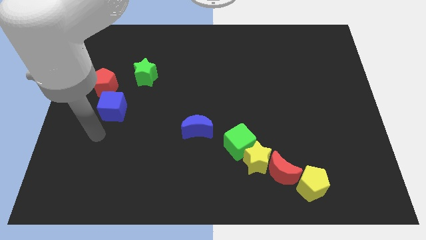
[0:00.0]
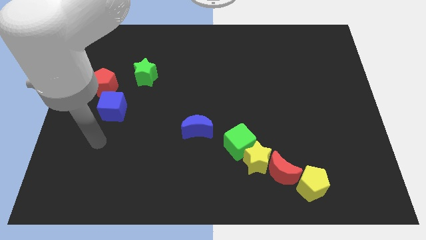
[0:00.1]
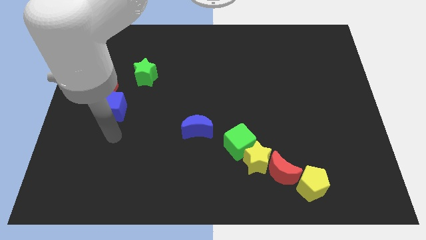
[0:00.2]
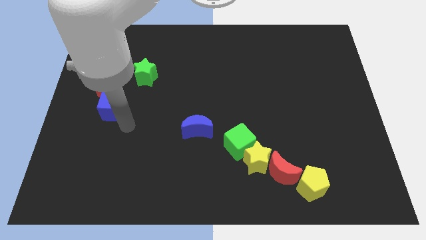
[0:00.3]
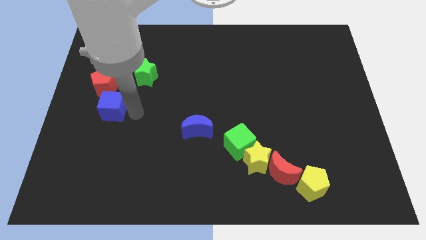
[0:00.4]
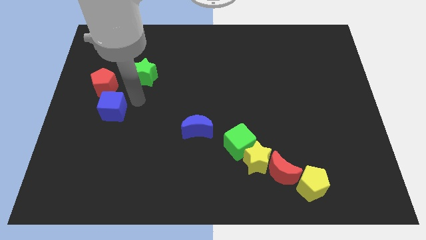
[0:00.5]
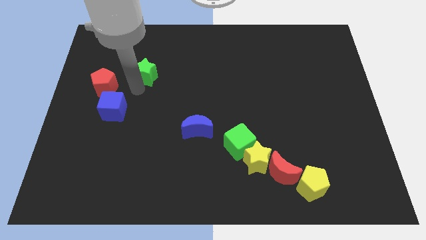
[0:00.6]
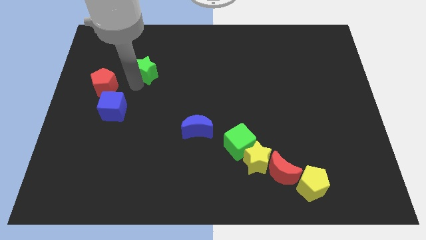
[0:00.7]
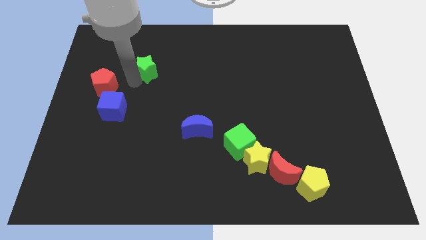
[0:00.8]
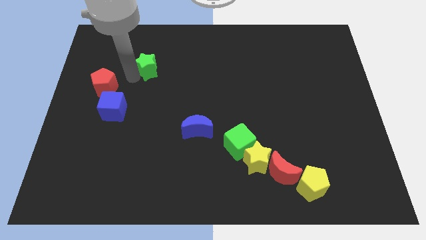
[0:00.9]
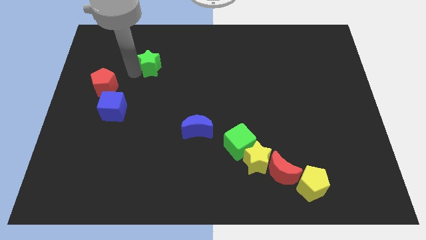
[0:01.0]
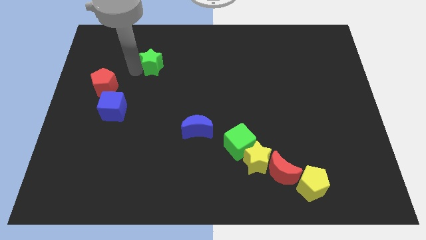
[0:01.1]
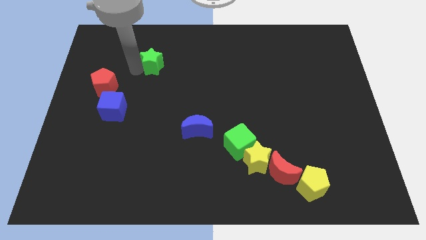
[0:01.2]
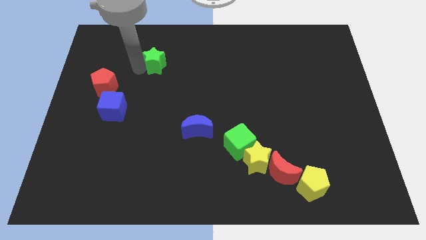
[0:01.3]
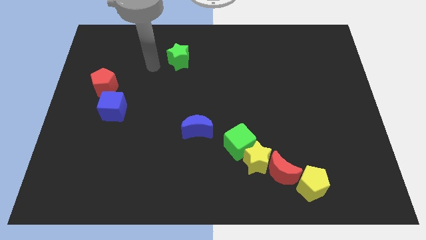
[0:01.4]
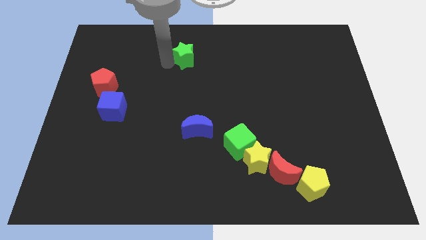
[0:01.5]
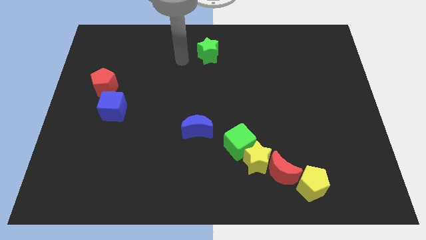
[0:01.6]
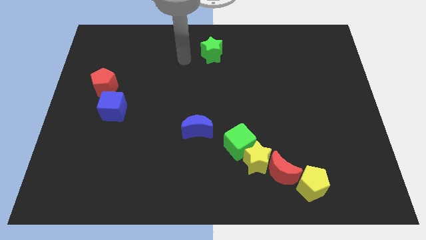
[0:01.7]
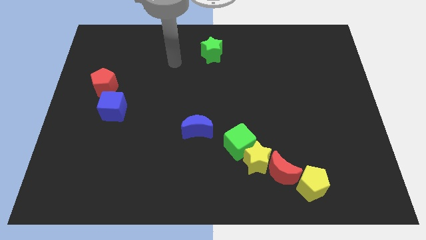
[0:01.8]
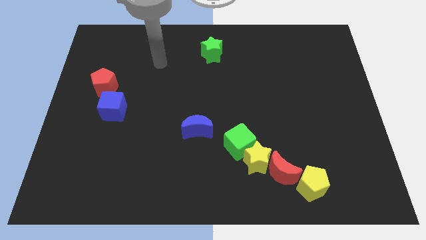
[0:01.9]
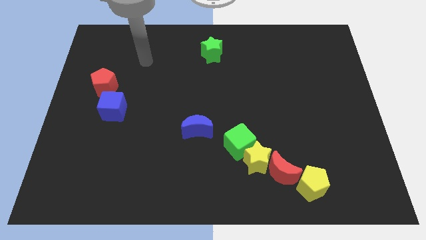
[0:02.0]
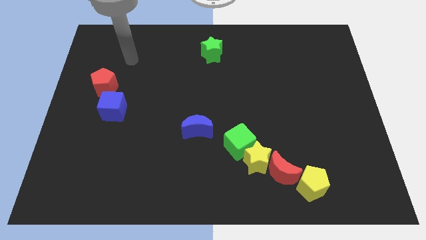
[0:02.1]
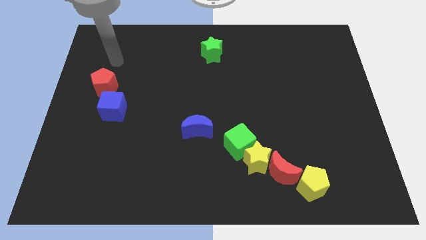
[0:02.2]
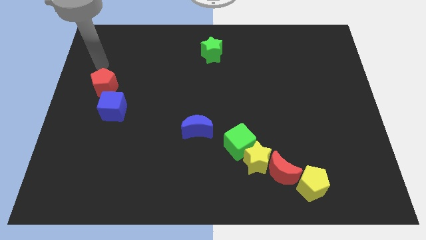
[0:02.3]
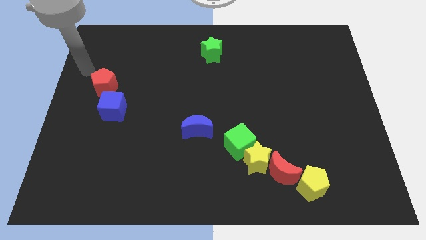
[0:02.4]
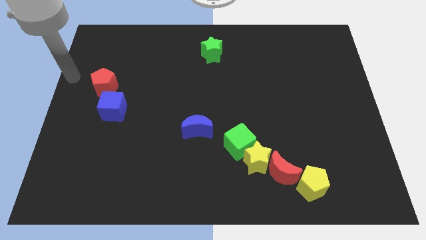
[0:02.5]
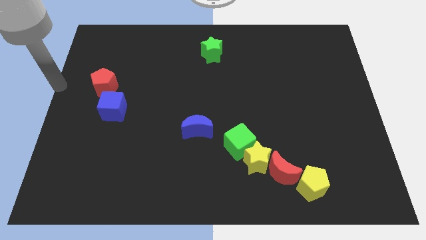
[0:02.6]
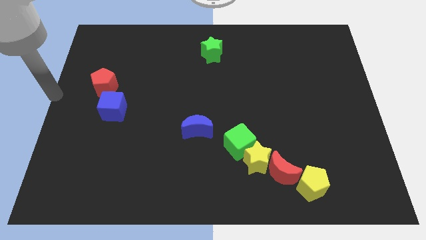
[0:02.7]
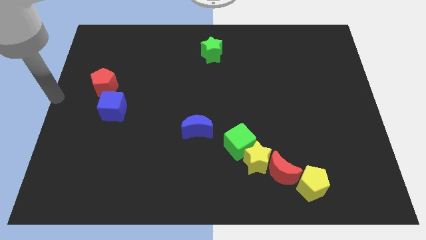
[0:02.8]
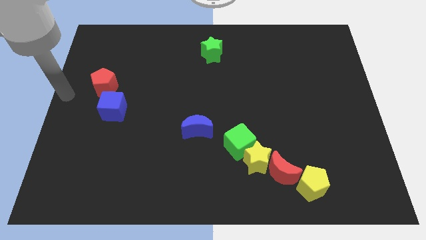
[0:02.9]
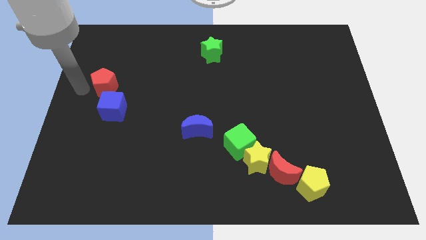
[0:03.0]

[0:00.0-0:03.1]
separate the green star from the blue cube and the red pentagon

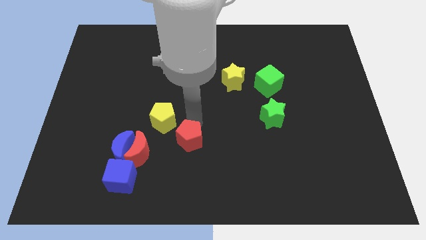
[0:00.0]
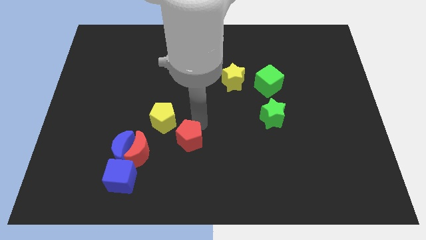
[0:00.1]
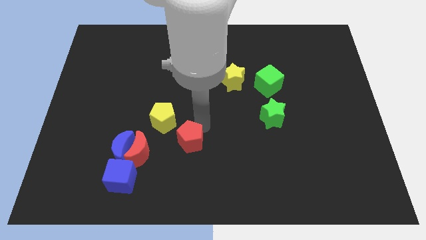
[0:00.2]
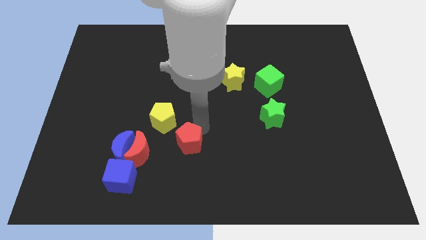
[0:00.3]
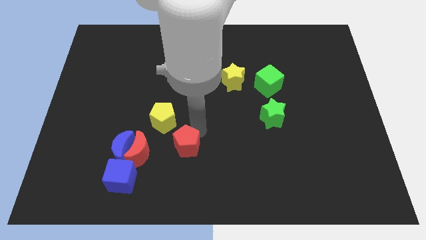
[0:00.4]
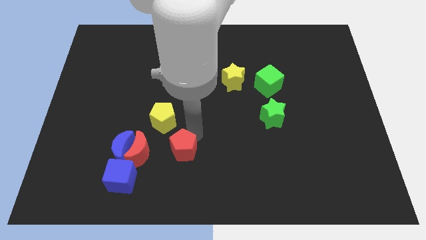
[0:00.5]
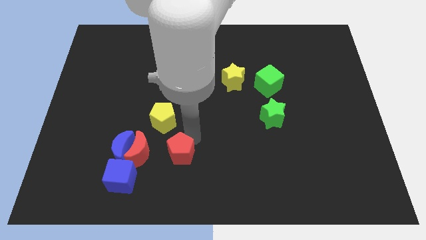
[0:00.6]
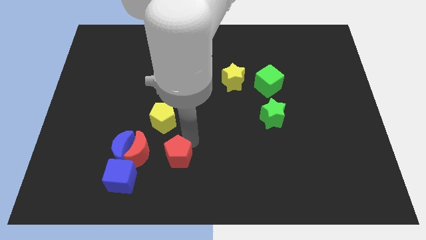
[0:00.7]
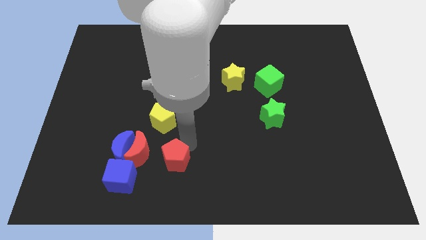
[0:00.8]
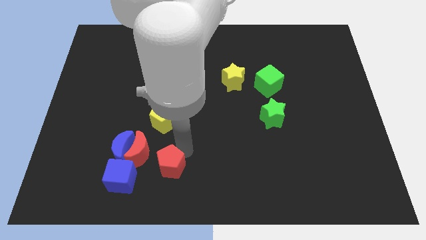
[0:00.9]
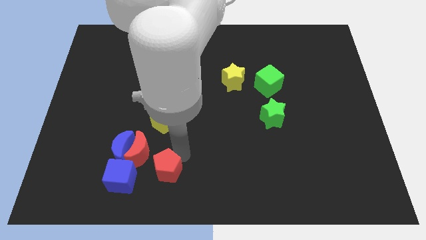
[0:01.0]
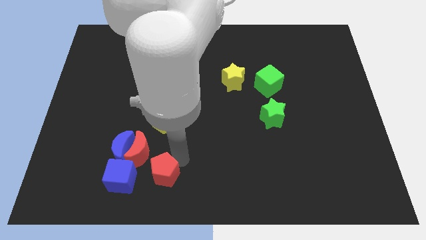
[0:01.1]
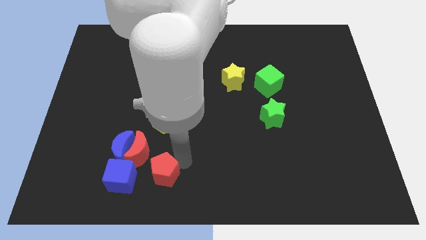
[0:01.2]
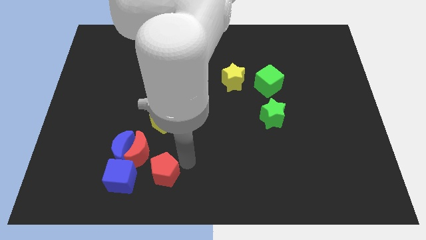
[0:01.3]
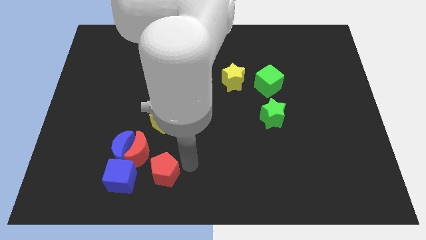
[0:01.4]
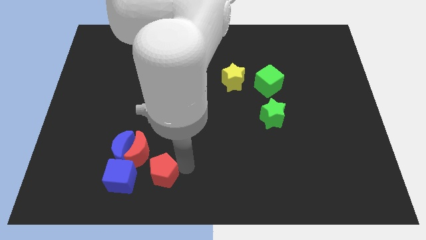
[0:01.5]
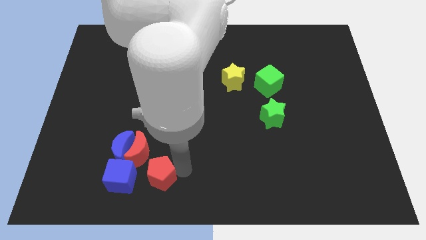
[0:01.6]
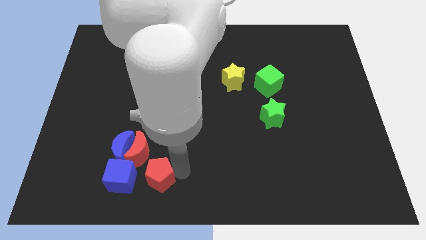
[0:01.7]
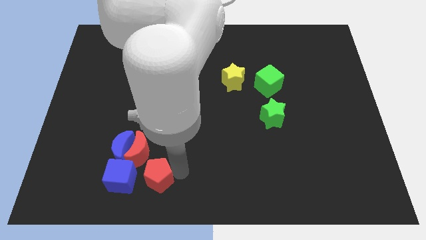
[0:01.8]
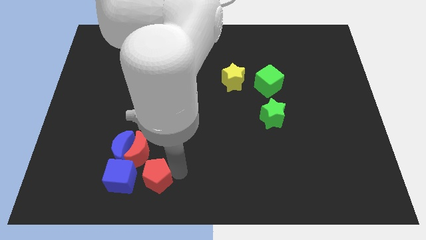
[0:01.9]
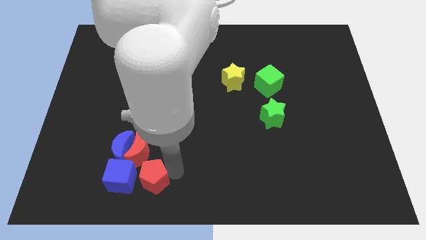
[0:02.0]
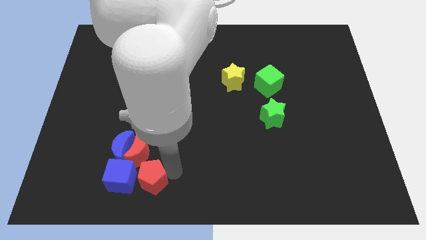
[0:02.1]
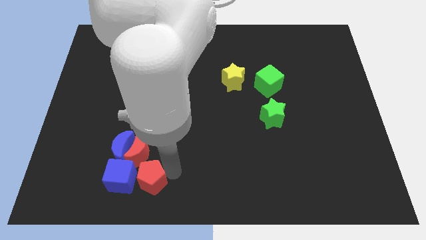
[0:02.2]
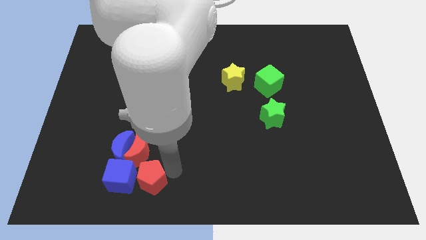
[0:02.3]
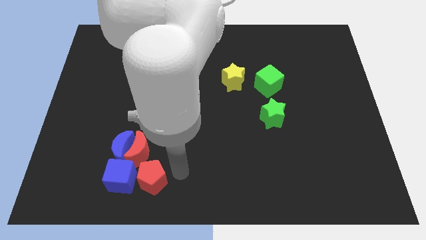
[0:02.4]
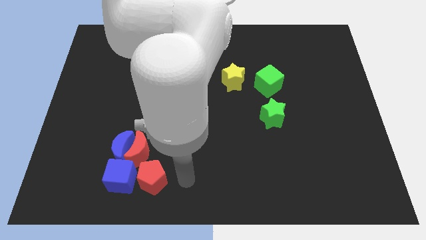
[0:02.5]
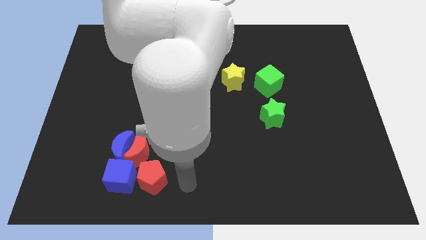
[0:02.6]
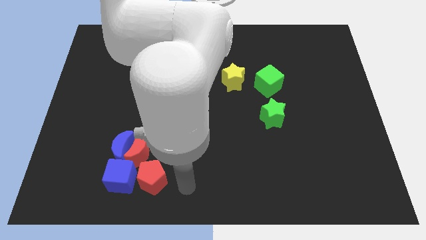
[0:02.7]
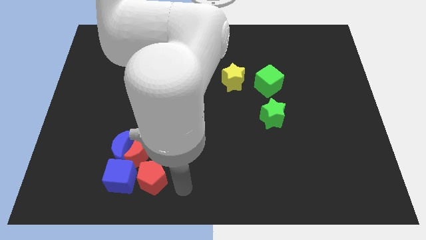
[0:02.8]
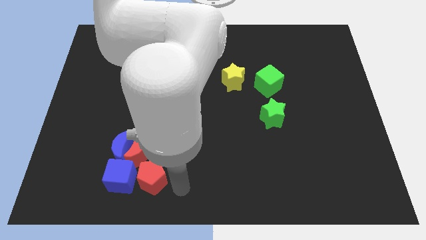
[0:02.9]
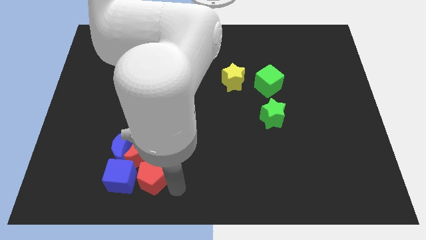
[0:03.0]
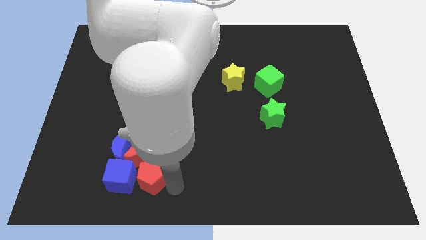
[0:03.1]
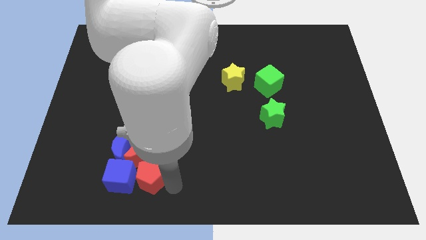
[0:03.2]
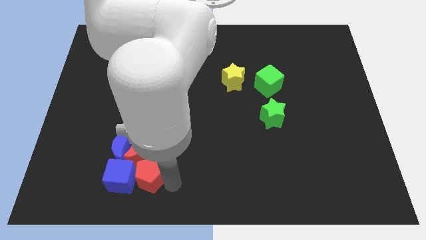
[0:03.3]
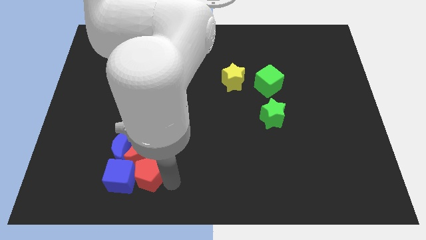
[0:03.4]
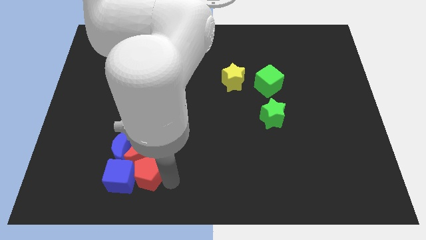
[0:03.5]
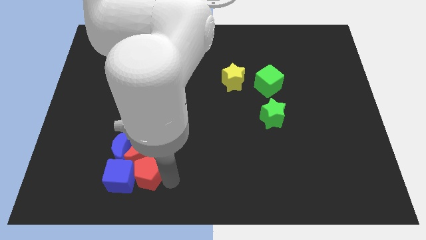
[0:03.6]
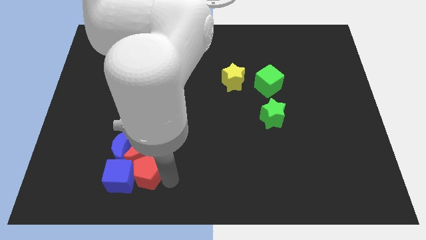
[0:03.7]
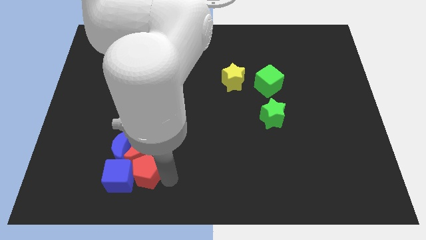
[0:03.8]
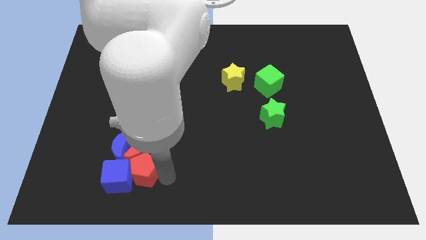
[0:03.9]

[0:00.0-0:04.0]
put the red pentagon right to the blue cube

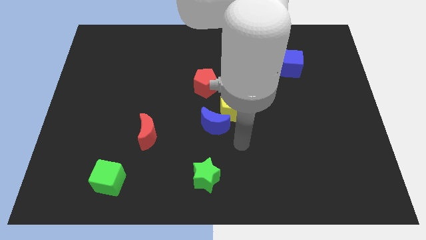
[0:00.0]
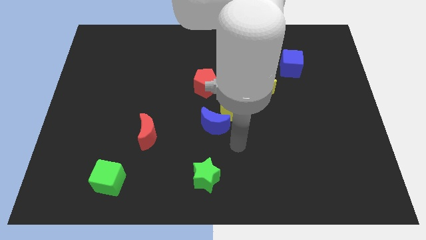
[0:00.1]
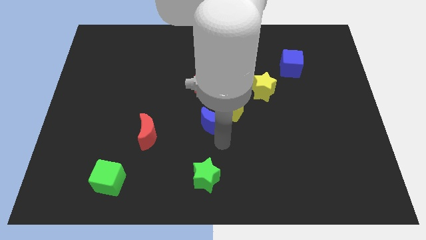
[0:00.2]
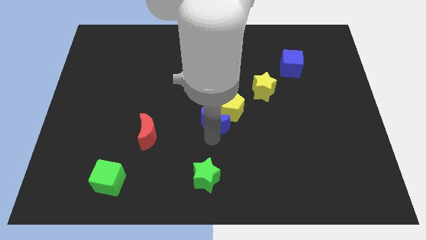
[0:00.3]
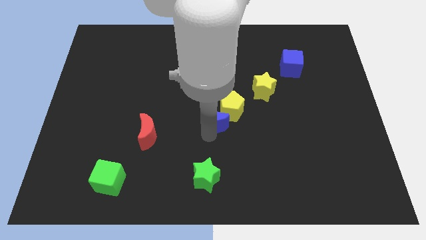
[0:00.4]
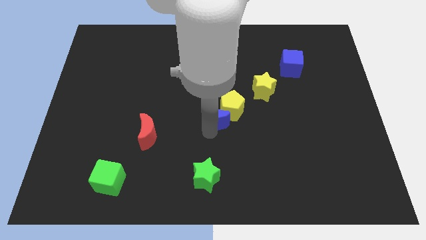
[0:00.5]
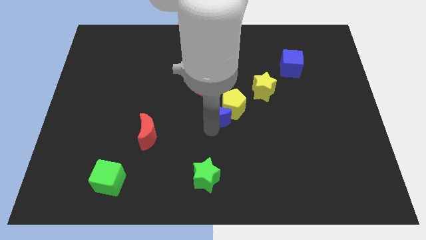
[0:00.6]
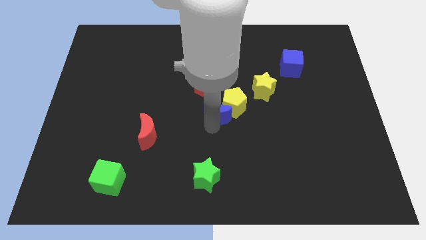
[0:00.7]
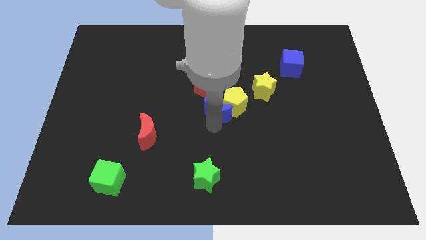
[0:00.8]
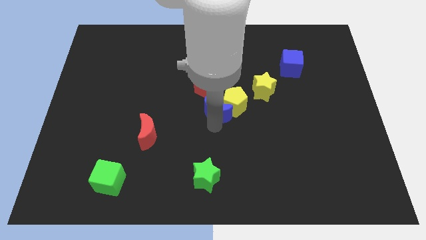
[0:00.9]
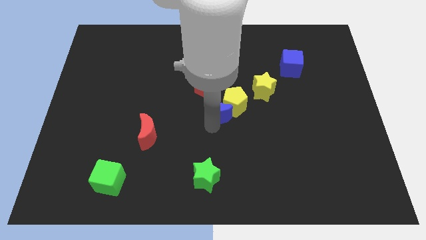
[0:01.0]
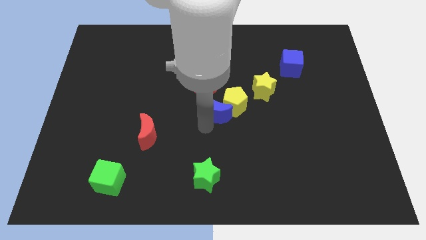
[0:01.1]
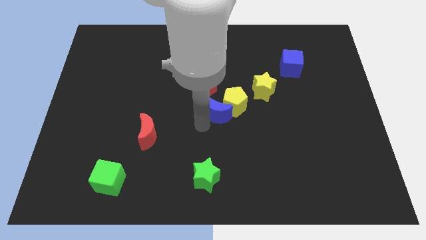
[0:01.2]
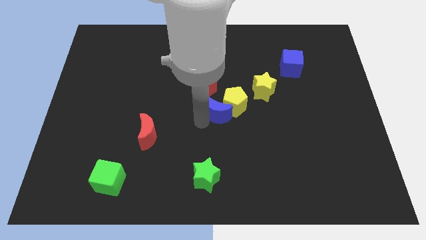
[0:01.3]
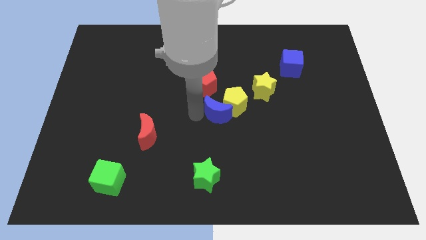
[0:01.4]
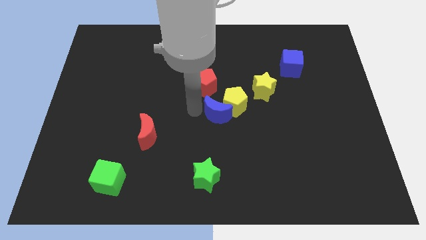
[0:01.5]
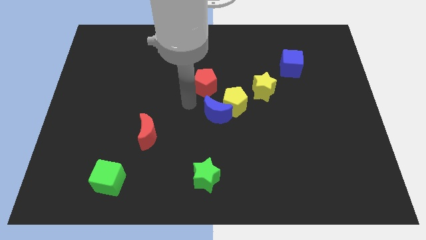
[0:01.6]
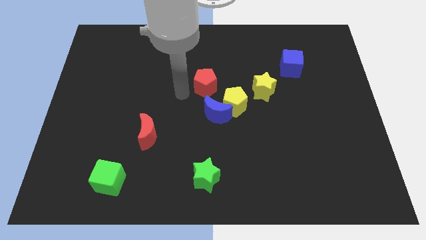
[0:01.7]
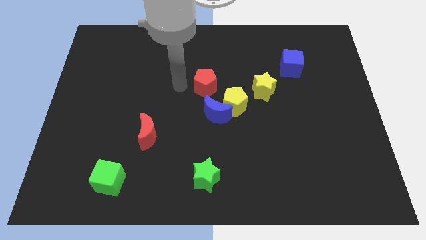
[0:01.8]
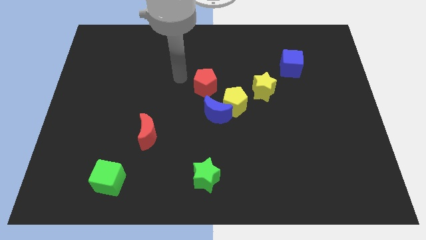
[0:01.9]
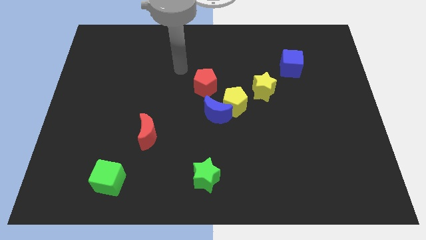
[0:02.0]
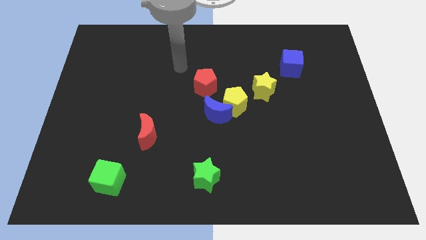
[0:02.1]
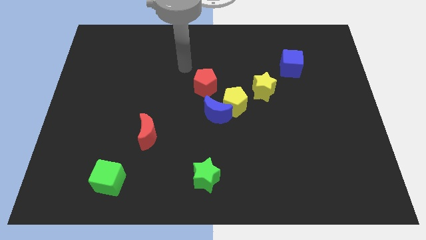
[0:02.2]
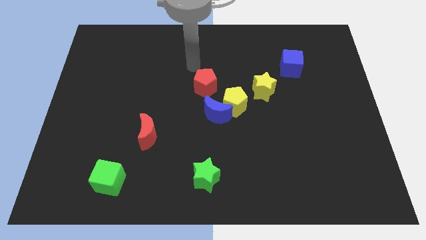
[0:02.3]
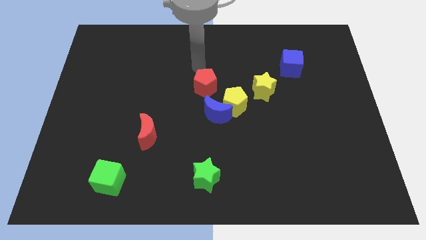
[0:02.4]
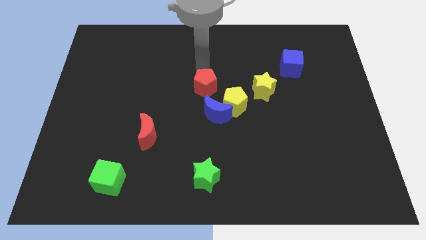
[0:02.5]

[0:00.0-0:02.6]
slightly push the blue moon and yellow pentagon towards up
